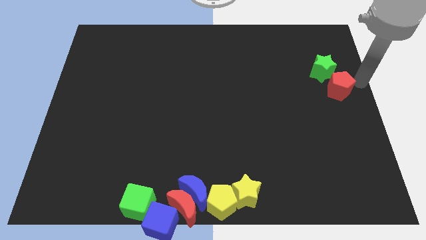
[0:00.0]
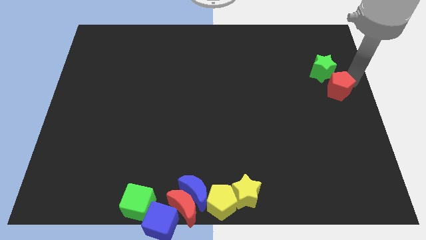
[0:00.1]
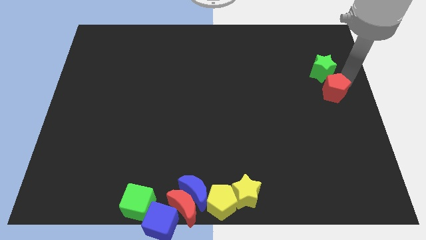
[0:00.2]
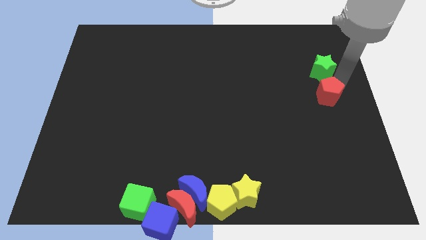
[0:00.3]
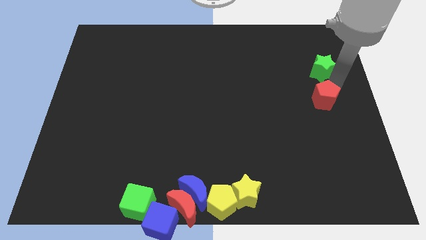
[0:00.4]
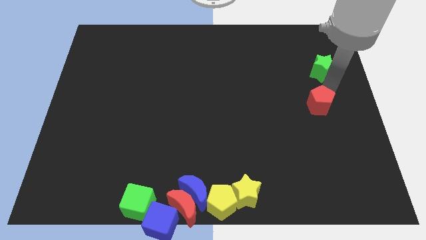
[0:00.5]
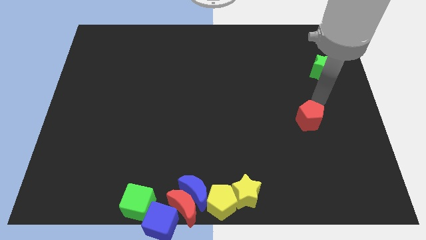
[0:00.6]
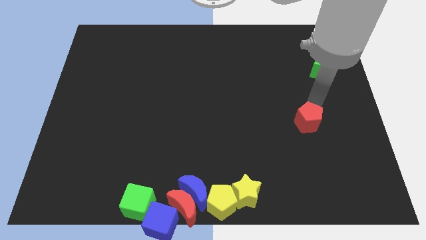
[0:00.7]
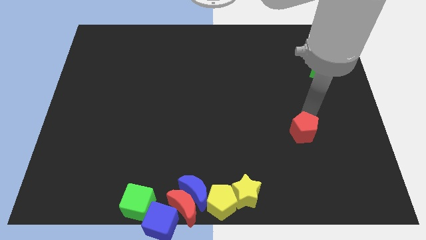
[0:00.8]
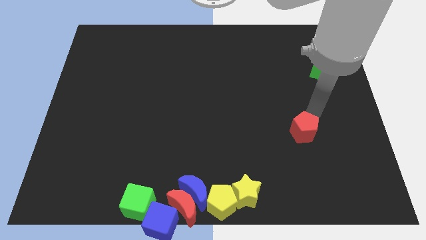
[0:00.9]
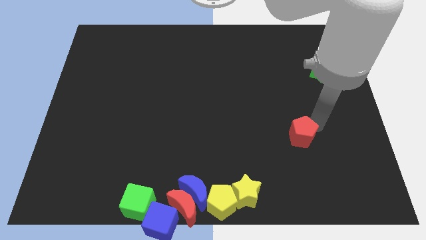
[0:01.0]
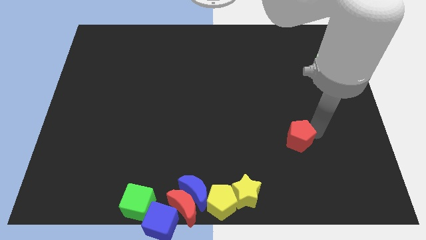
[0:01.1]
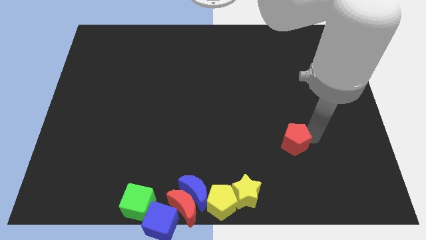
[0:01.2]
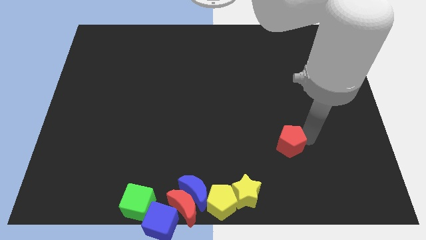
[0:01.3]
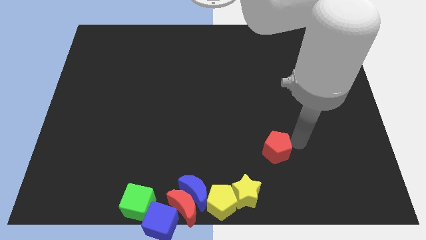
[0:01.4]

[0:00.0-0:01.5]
move the red pentagon towards the yellow star

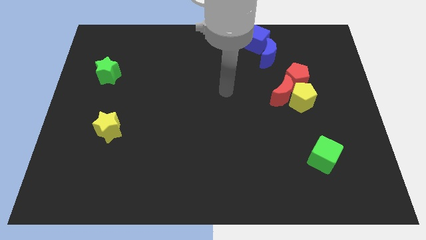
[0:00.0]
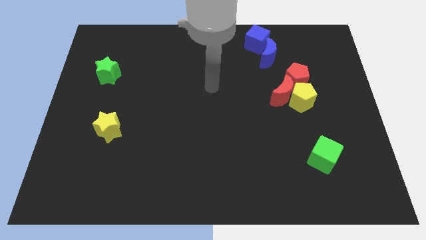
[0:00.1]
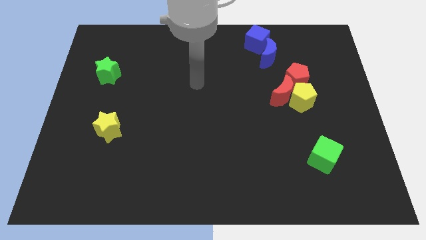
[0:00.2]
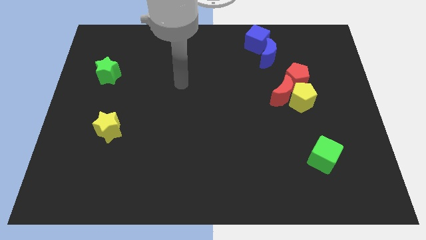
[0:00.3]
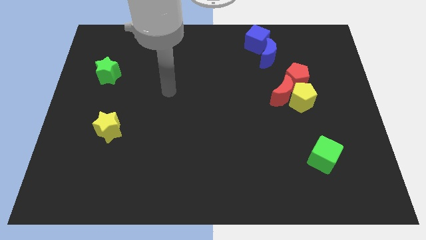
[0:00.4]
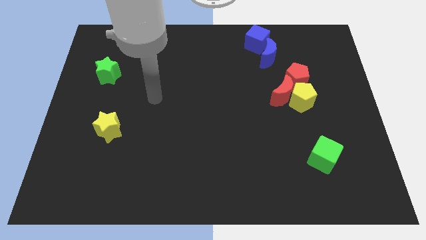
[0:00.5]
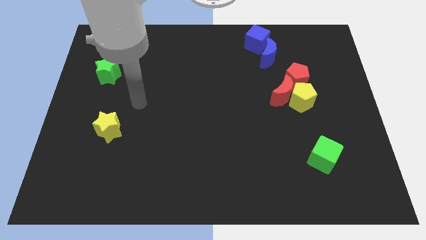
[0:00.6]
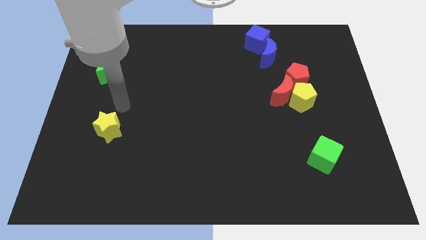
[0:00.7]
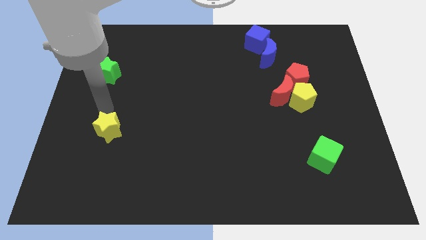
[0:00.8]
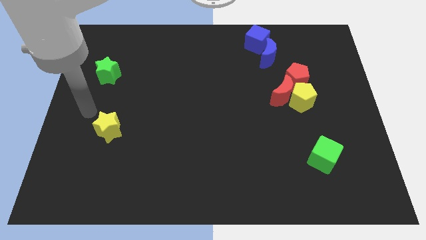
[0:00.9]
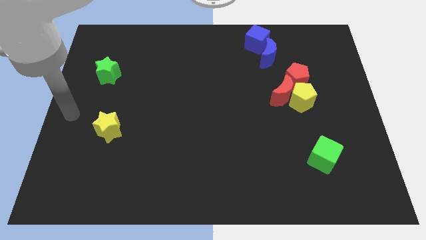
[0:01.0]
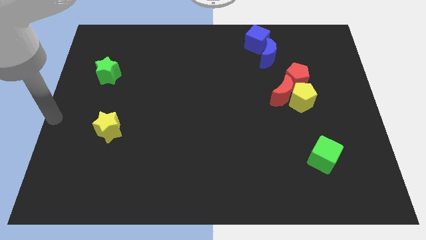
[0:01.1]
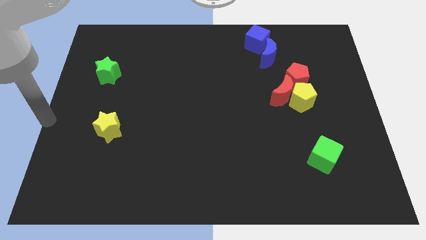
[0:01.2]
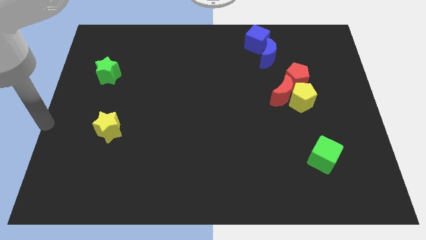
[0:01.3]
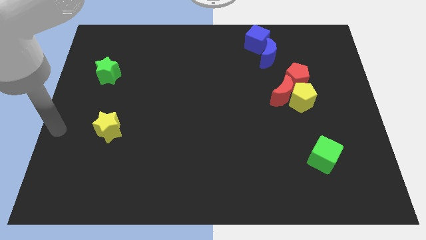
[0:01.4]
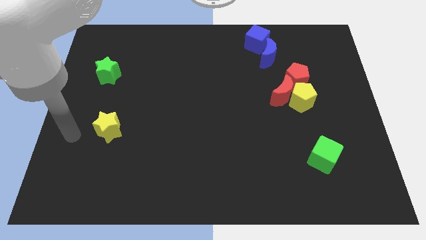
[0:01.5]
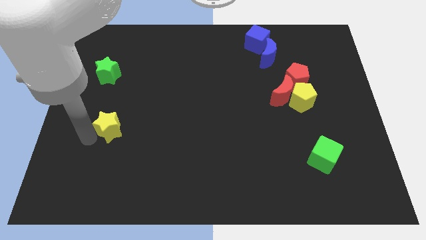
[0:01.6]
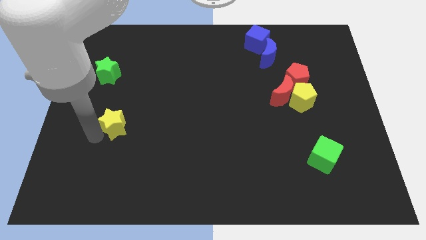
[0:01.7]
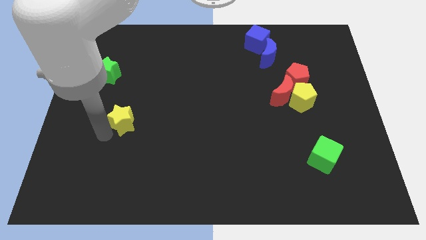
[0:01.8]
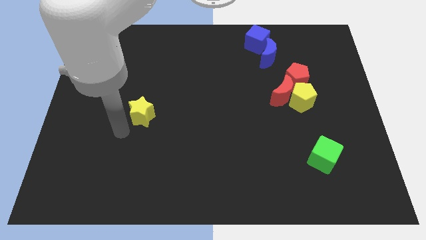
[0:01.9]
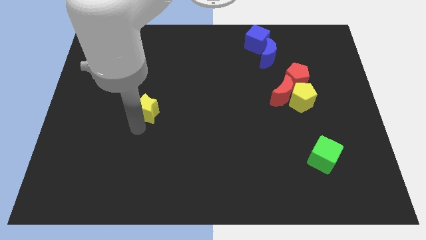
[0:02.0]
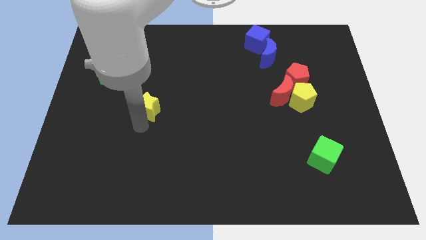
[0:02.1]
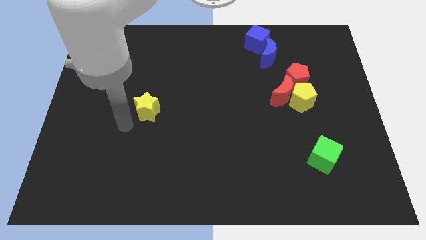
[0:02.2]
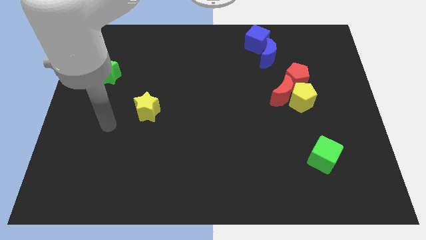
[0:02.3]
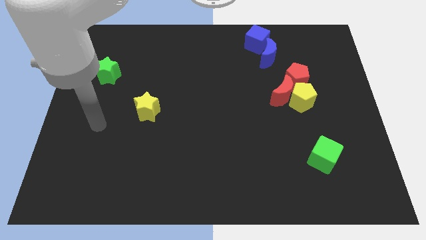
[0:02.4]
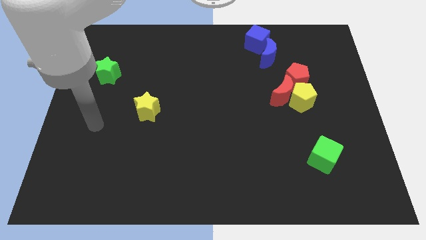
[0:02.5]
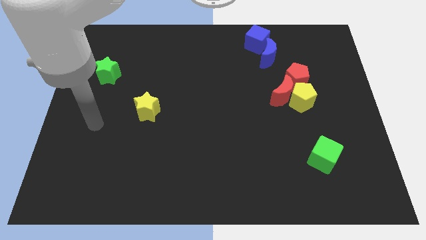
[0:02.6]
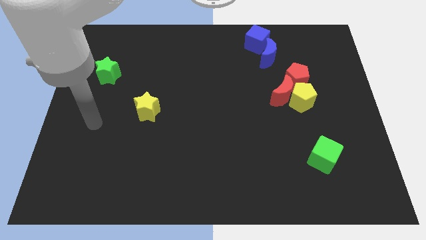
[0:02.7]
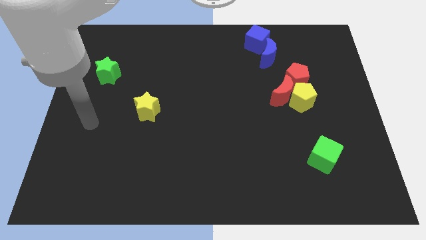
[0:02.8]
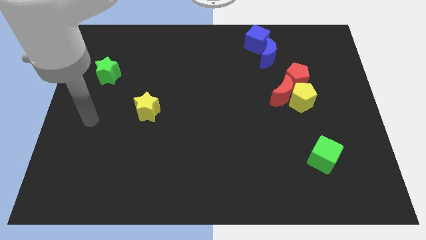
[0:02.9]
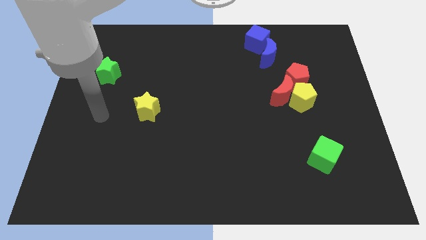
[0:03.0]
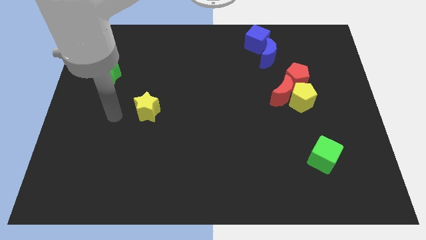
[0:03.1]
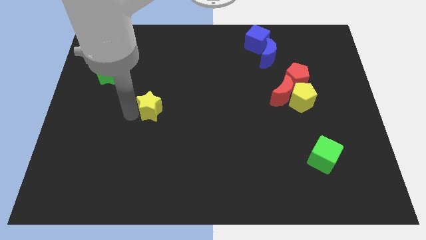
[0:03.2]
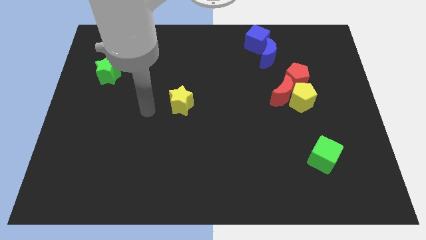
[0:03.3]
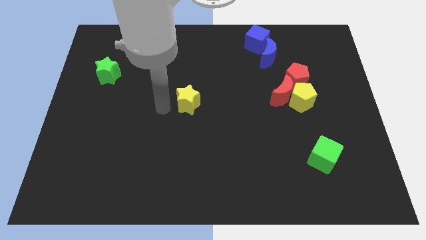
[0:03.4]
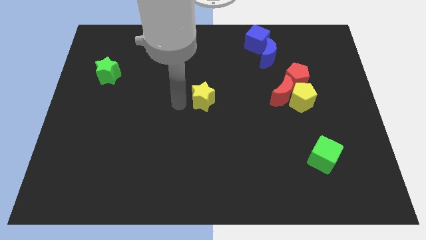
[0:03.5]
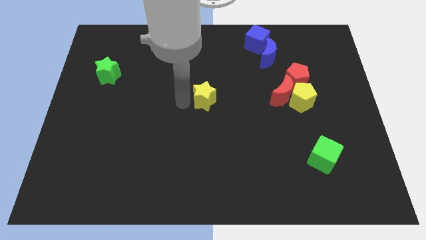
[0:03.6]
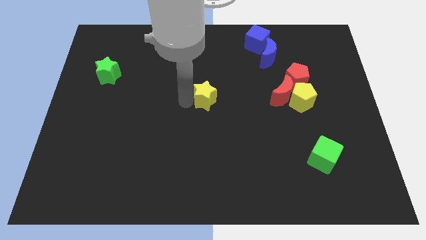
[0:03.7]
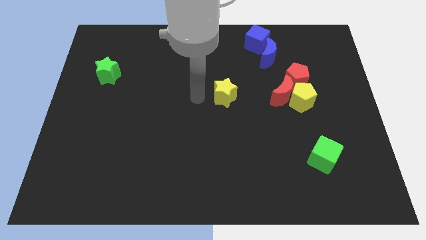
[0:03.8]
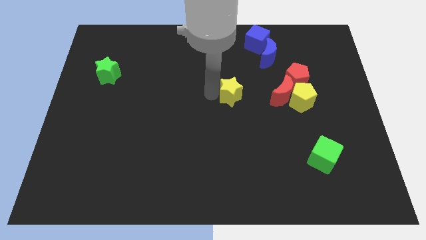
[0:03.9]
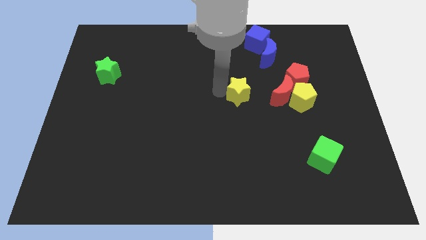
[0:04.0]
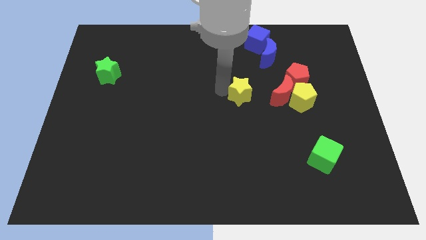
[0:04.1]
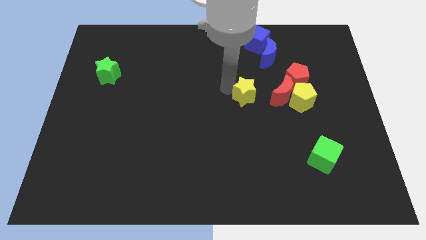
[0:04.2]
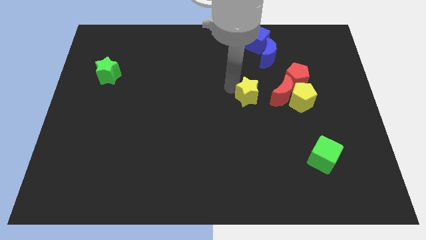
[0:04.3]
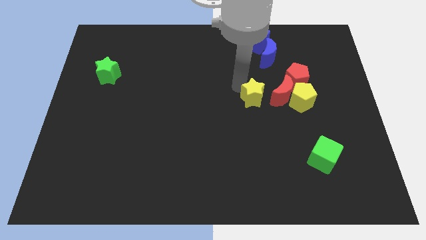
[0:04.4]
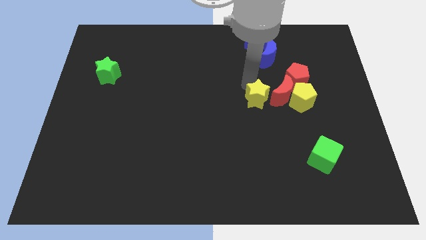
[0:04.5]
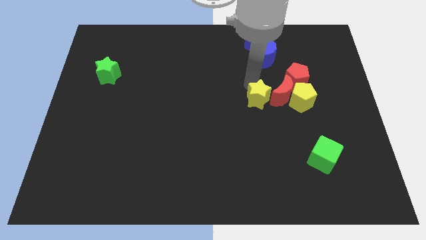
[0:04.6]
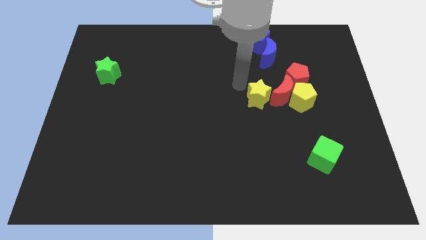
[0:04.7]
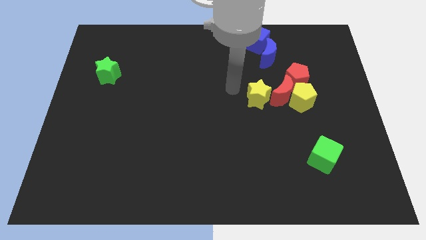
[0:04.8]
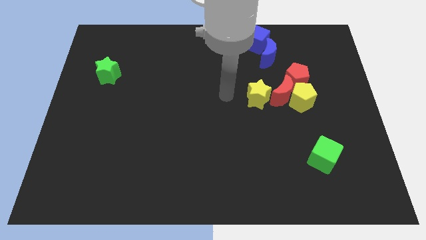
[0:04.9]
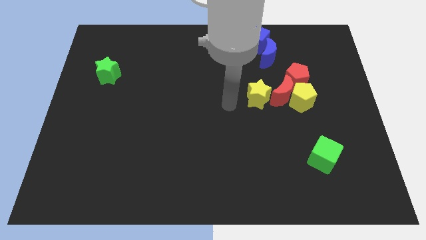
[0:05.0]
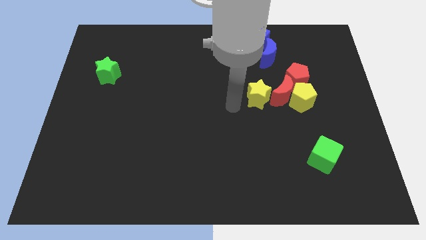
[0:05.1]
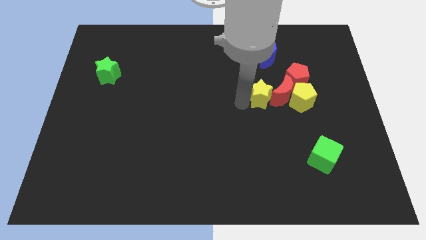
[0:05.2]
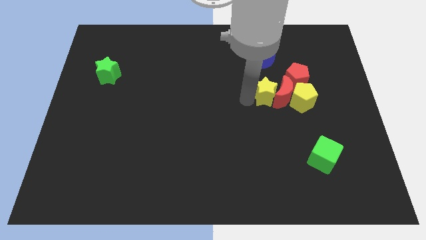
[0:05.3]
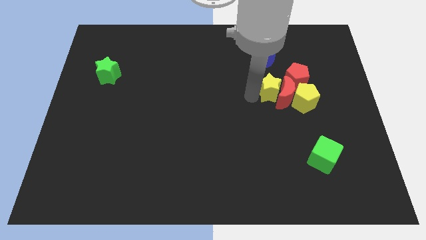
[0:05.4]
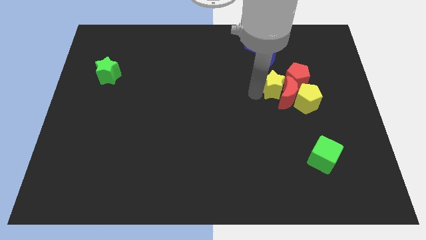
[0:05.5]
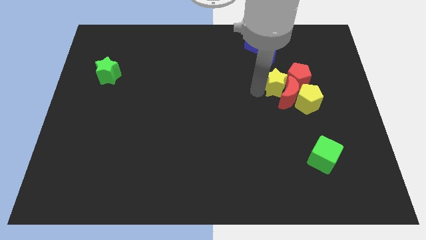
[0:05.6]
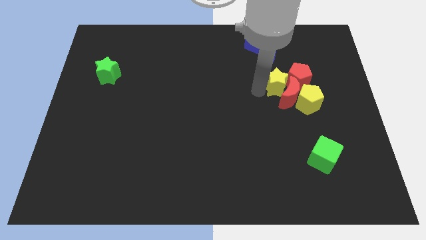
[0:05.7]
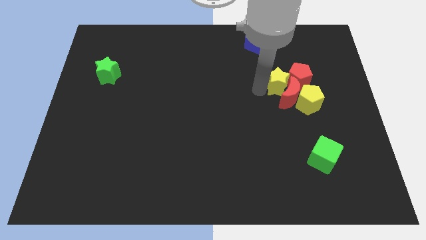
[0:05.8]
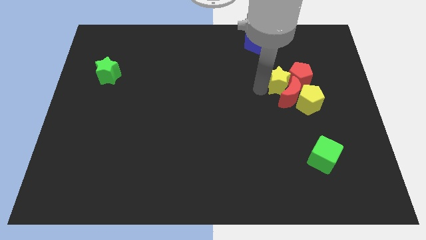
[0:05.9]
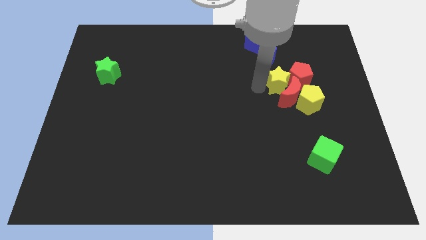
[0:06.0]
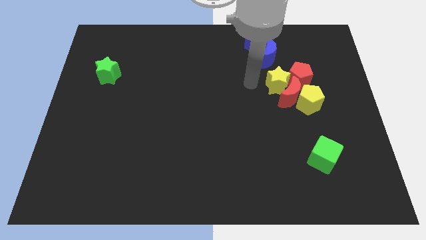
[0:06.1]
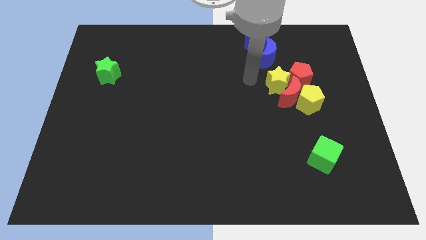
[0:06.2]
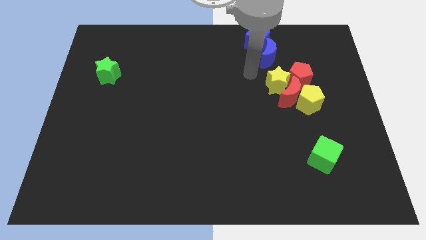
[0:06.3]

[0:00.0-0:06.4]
move the yellow star above the red moon

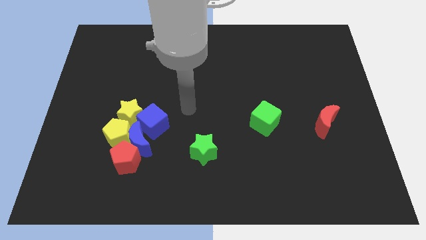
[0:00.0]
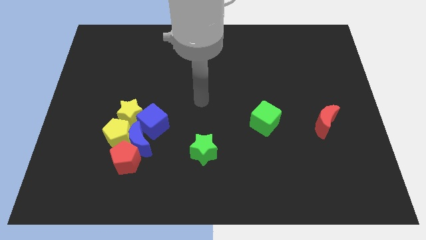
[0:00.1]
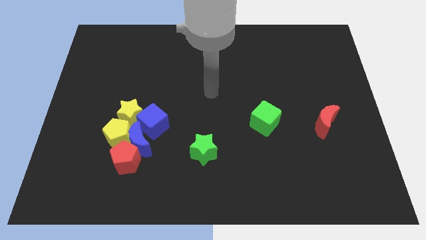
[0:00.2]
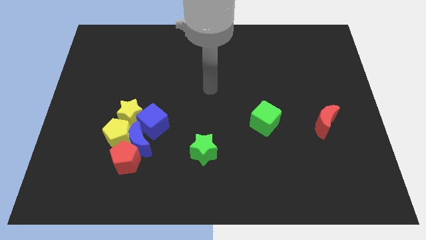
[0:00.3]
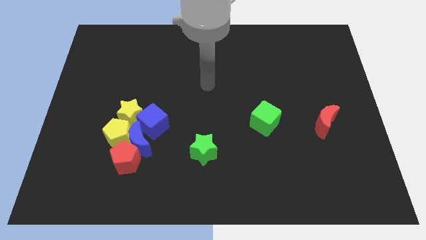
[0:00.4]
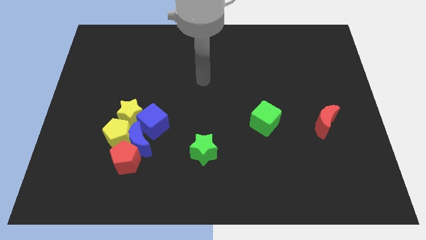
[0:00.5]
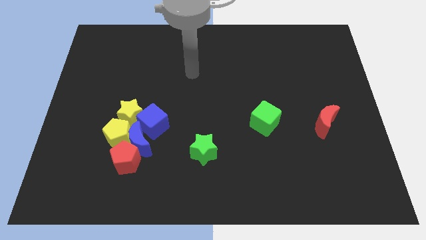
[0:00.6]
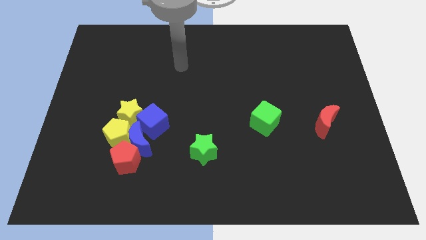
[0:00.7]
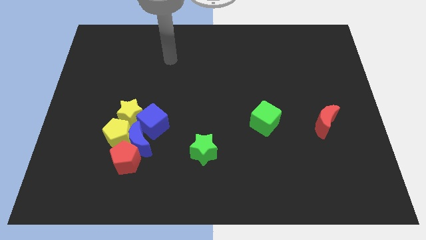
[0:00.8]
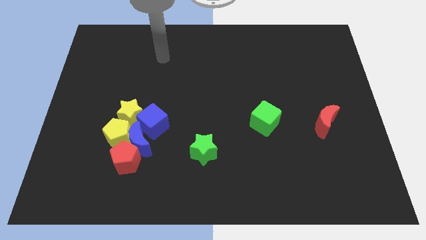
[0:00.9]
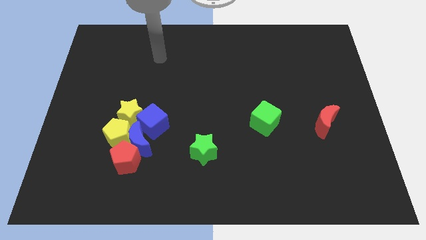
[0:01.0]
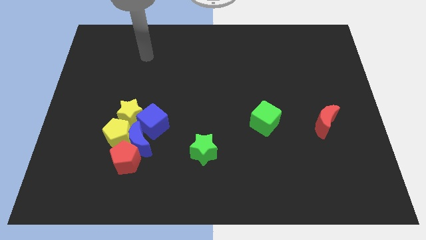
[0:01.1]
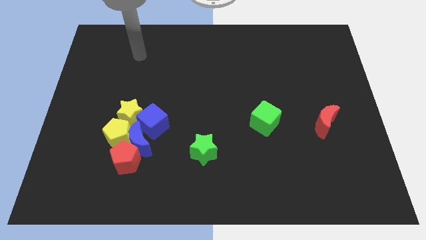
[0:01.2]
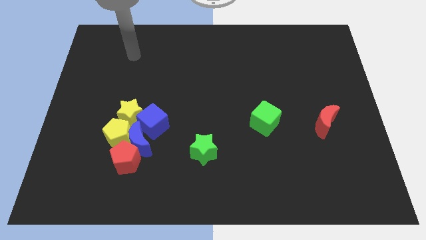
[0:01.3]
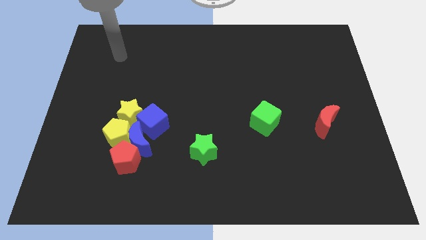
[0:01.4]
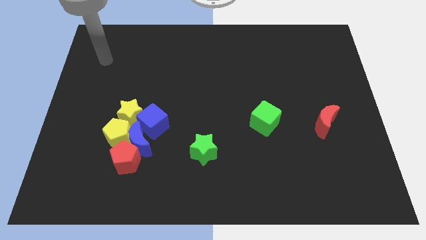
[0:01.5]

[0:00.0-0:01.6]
move your arm to the top left corner
